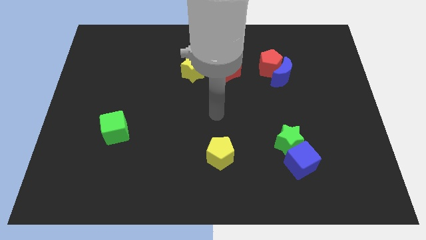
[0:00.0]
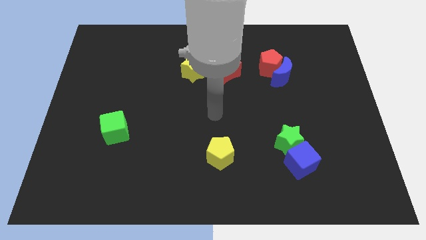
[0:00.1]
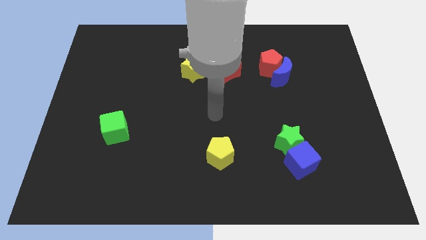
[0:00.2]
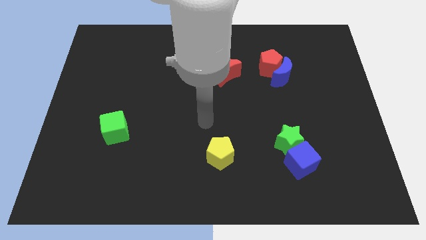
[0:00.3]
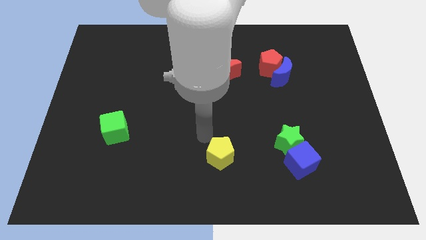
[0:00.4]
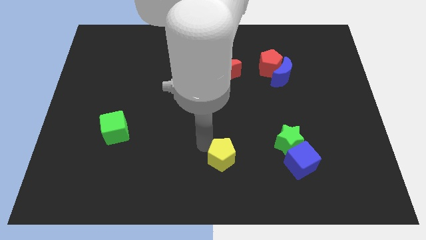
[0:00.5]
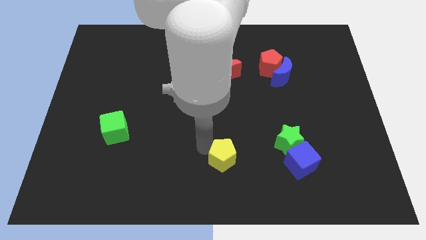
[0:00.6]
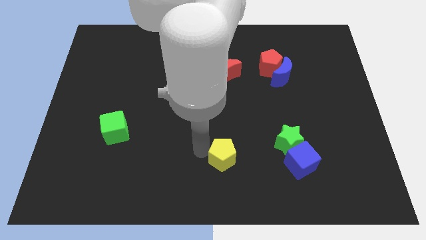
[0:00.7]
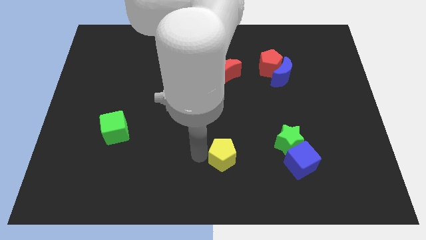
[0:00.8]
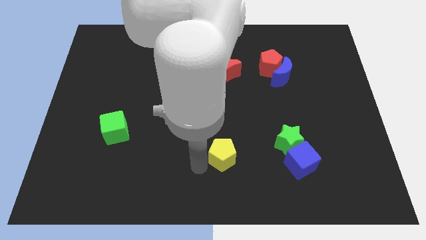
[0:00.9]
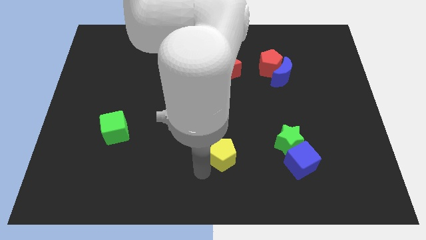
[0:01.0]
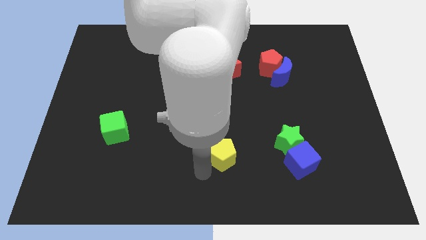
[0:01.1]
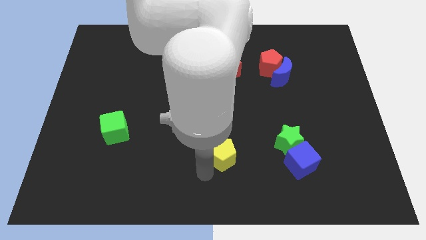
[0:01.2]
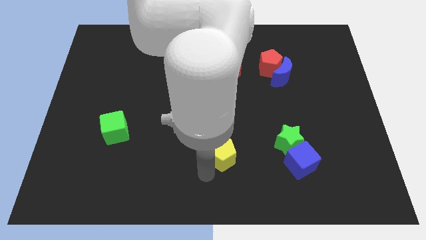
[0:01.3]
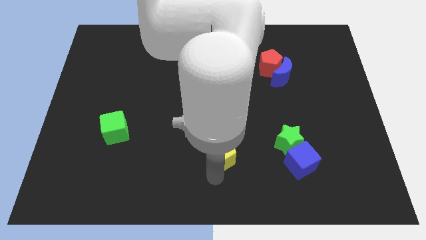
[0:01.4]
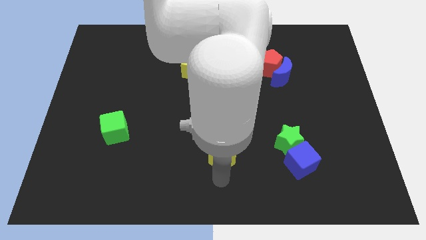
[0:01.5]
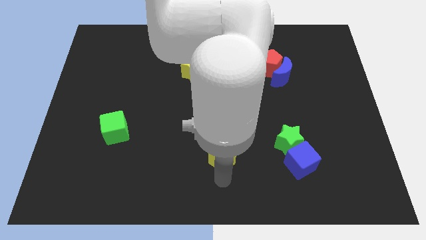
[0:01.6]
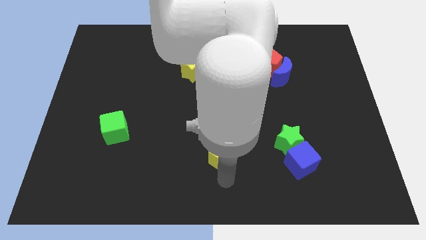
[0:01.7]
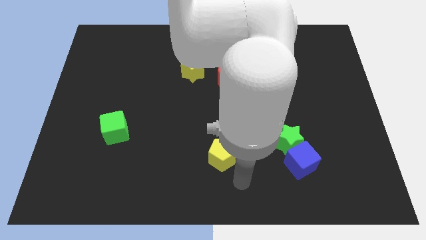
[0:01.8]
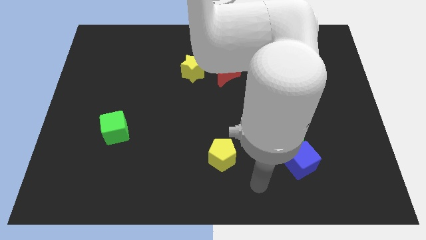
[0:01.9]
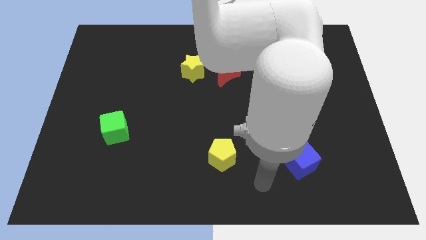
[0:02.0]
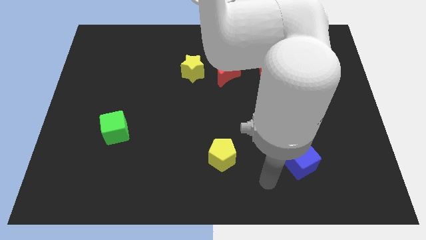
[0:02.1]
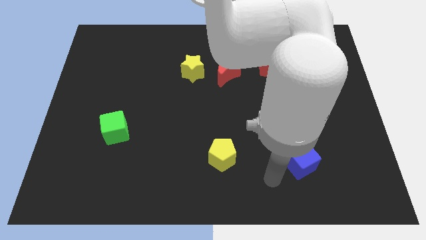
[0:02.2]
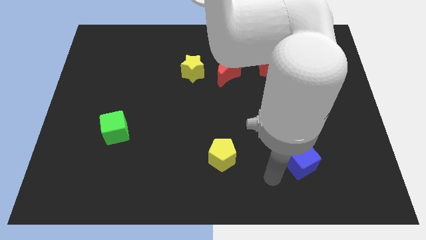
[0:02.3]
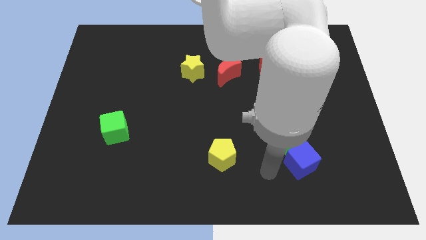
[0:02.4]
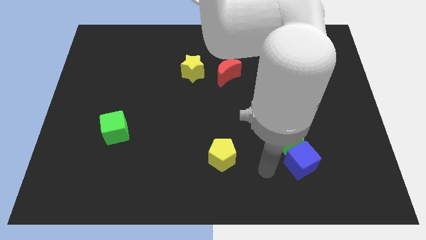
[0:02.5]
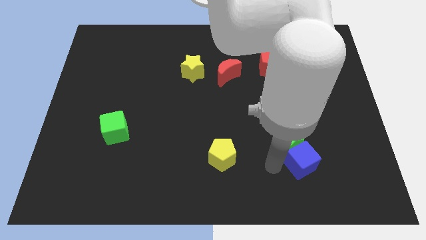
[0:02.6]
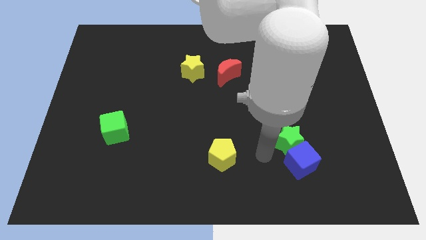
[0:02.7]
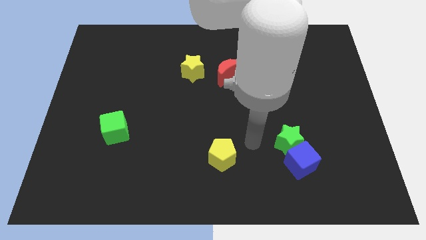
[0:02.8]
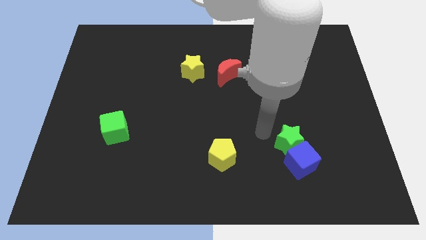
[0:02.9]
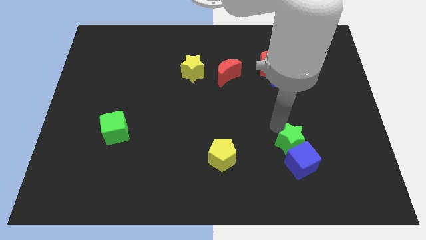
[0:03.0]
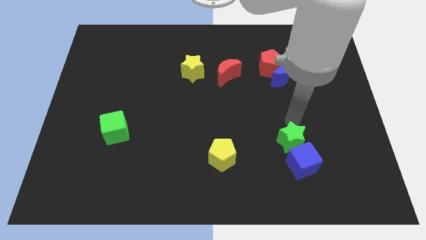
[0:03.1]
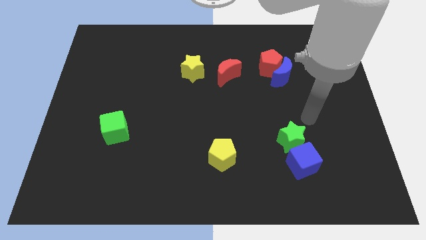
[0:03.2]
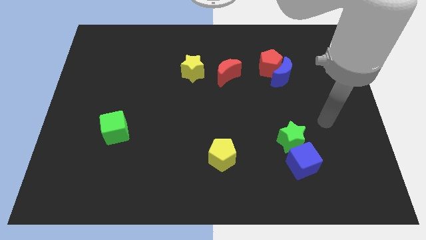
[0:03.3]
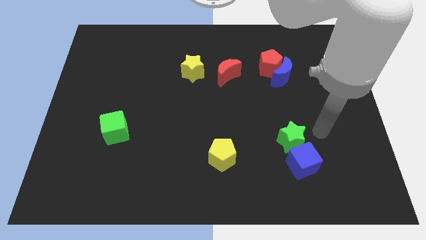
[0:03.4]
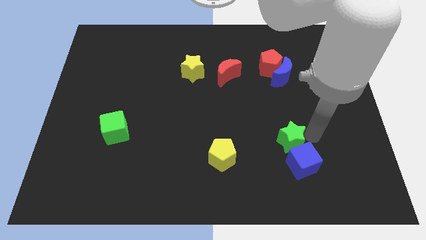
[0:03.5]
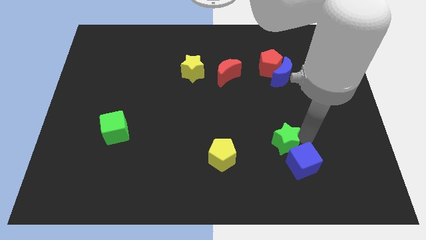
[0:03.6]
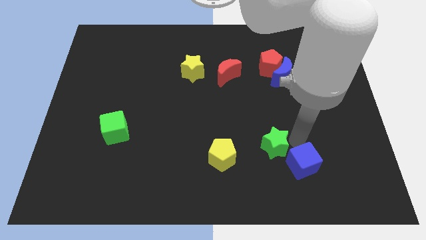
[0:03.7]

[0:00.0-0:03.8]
slide the green star slightly to the left

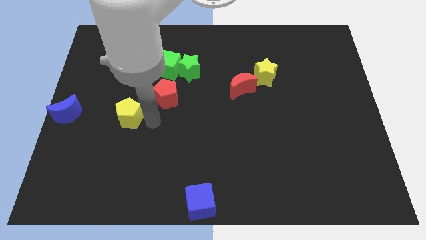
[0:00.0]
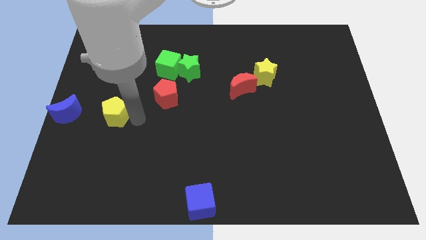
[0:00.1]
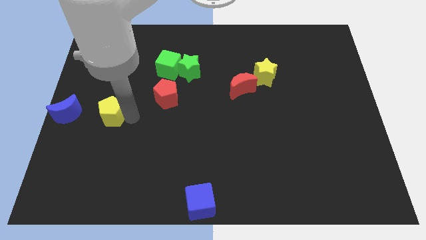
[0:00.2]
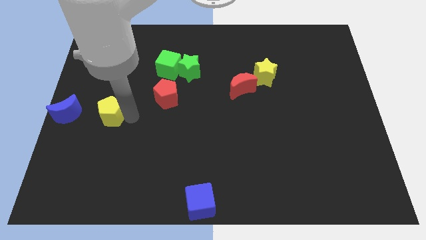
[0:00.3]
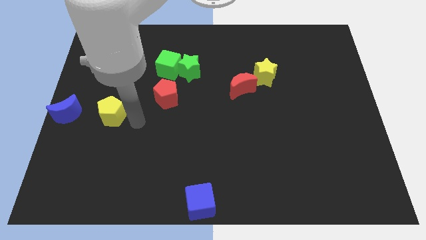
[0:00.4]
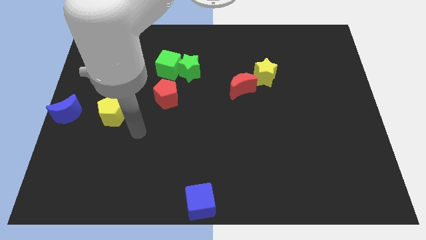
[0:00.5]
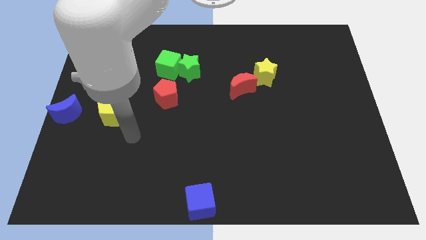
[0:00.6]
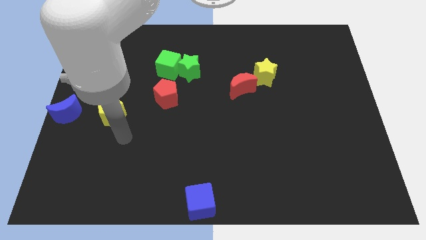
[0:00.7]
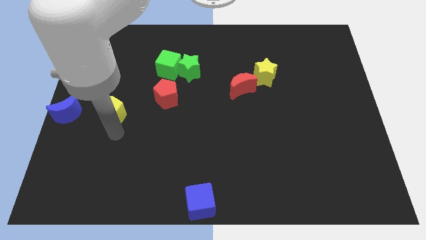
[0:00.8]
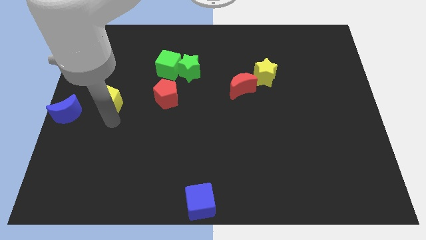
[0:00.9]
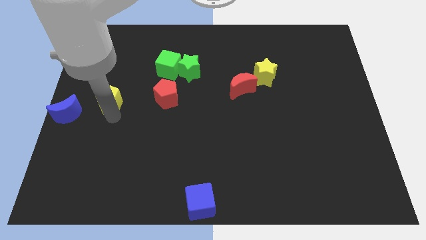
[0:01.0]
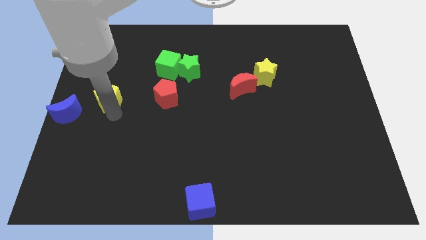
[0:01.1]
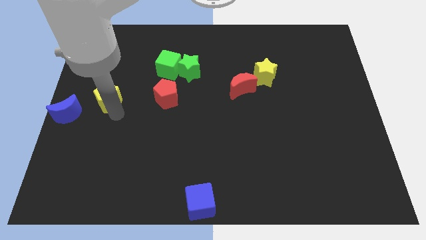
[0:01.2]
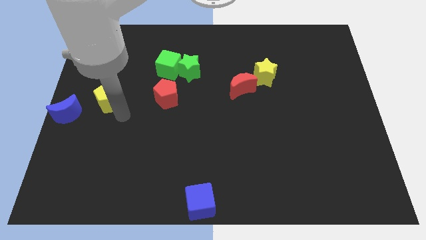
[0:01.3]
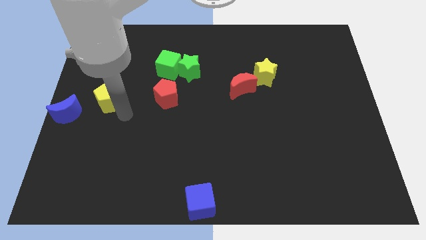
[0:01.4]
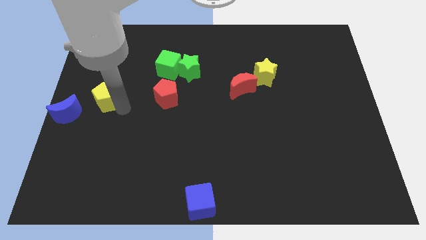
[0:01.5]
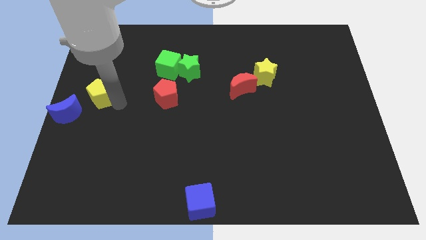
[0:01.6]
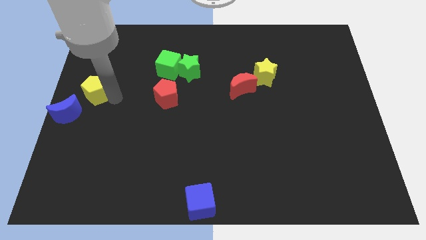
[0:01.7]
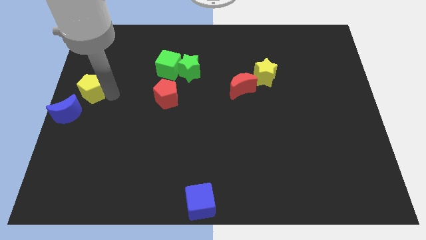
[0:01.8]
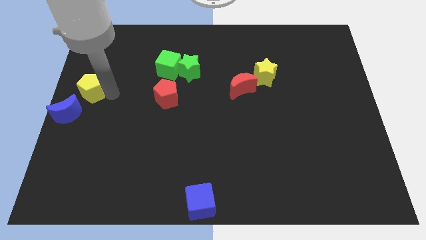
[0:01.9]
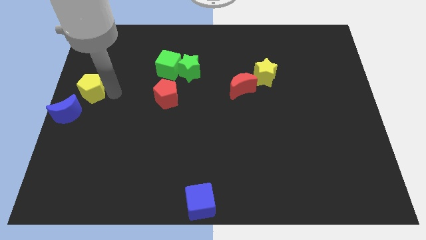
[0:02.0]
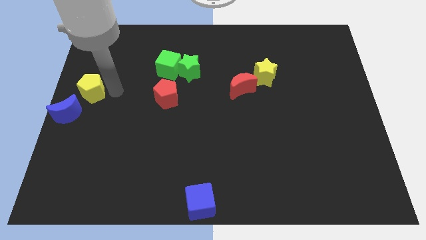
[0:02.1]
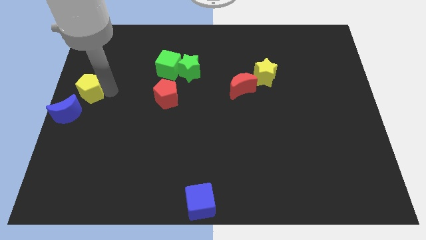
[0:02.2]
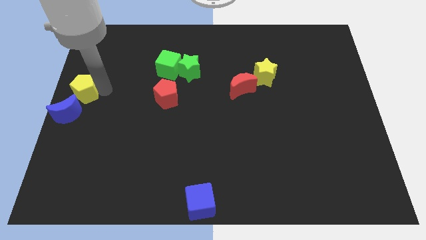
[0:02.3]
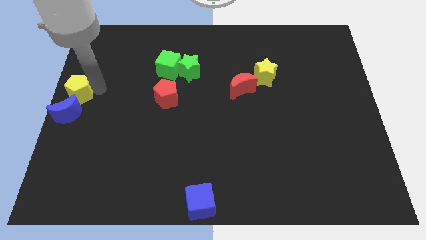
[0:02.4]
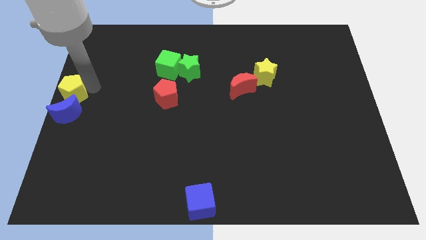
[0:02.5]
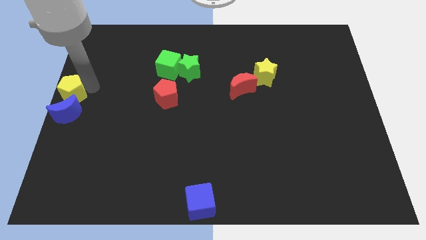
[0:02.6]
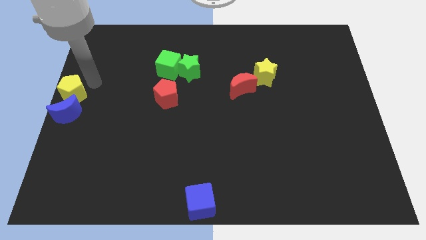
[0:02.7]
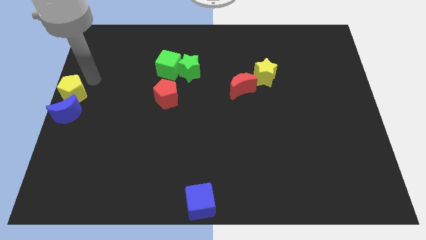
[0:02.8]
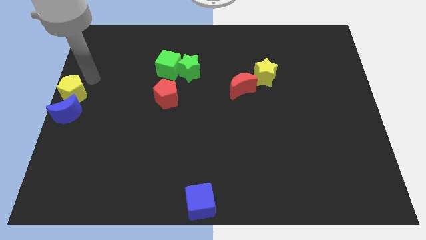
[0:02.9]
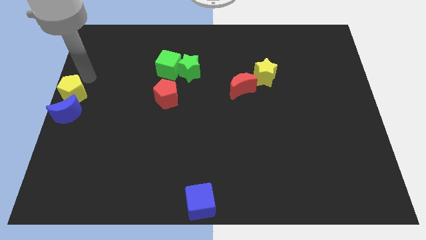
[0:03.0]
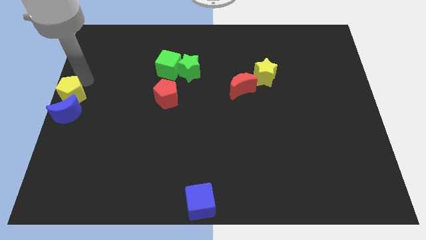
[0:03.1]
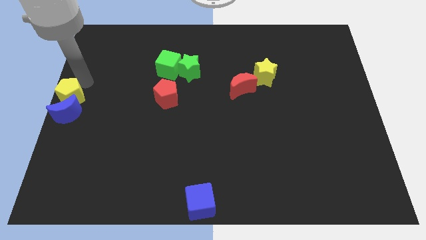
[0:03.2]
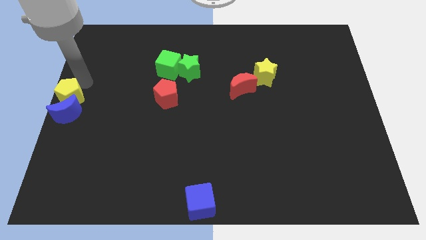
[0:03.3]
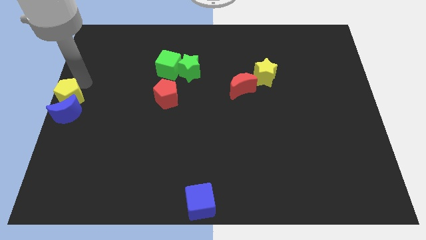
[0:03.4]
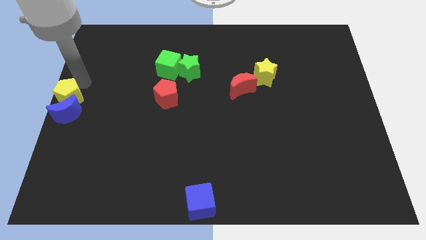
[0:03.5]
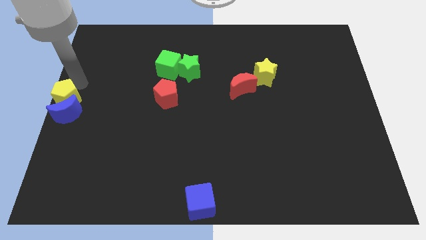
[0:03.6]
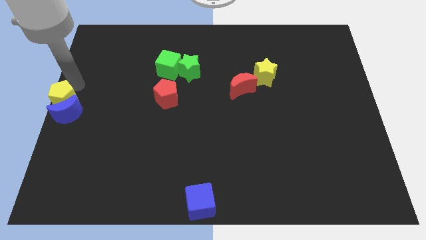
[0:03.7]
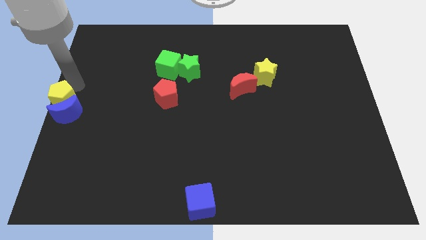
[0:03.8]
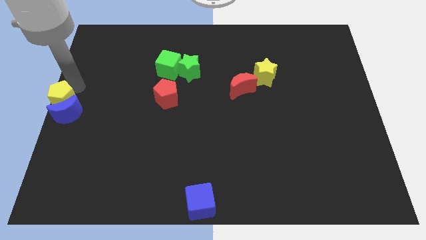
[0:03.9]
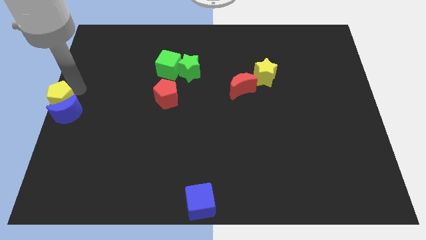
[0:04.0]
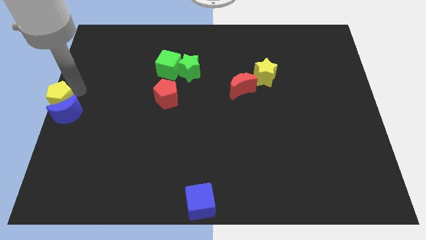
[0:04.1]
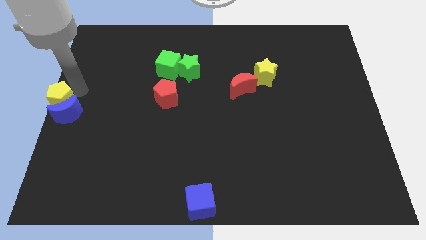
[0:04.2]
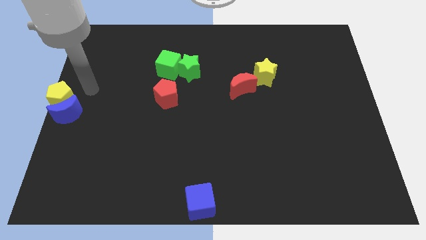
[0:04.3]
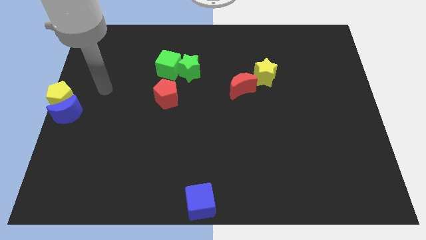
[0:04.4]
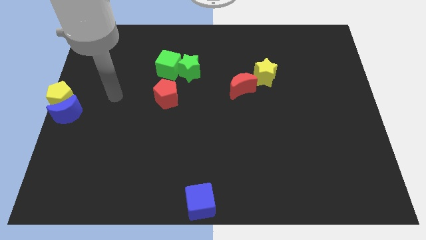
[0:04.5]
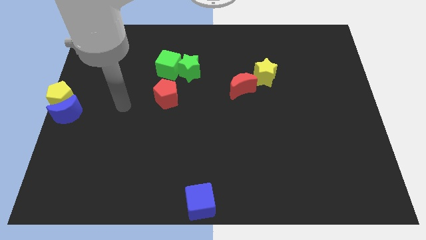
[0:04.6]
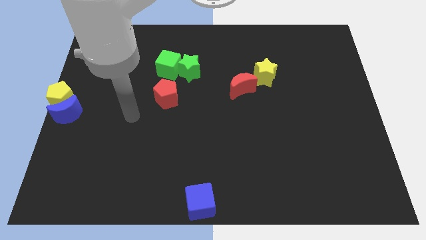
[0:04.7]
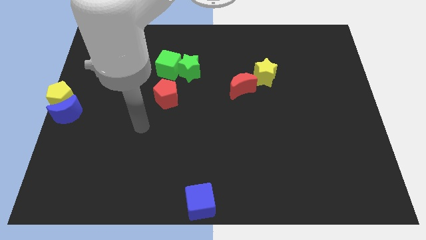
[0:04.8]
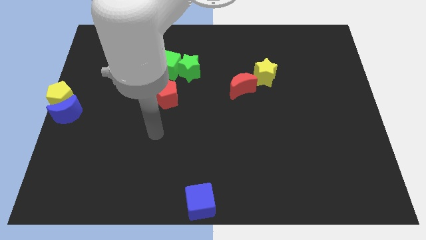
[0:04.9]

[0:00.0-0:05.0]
push the yellow pentagon to the top of the red crescent
